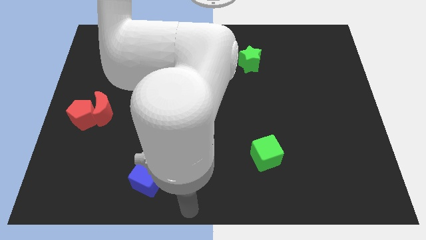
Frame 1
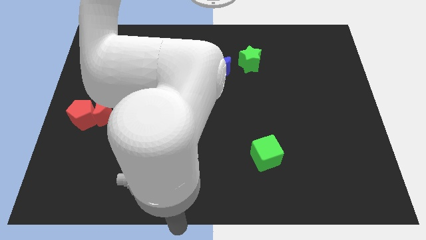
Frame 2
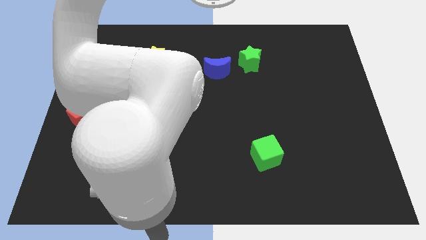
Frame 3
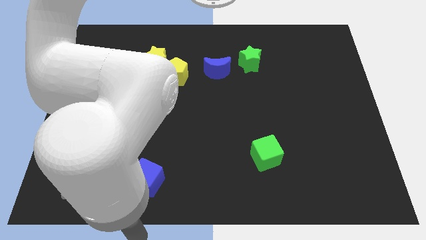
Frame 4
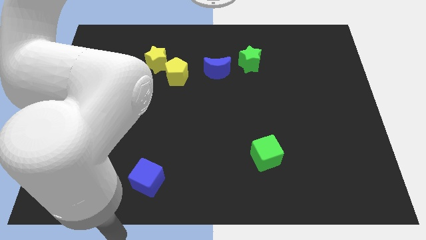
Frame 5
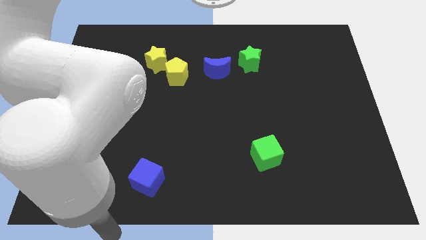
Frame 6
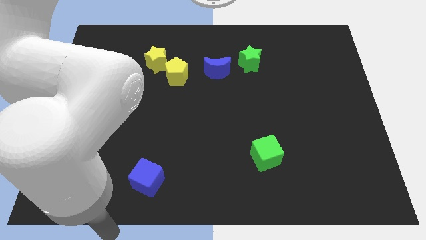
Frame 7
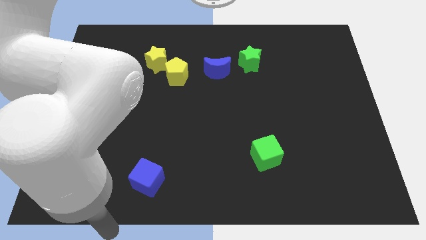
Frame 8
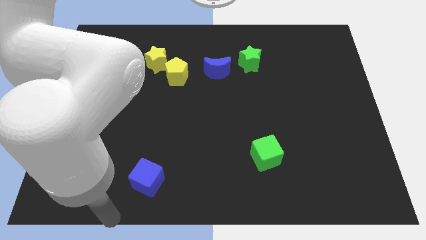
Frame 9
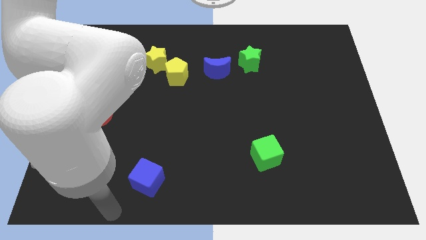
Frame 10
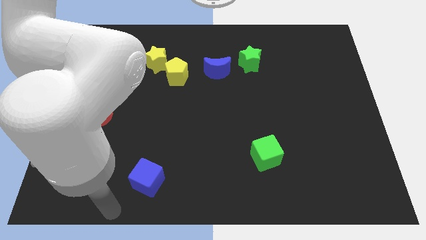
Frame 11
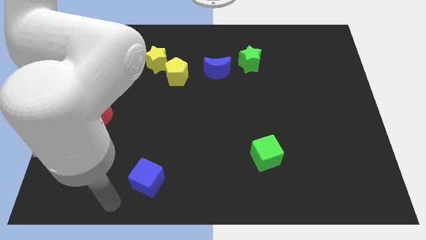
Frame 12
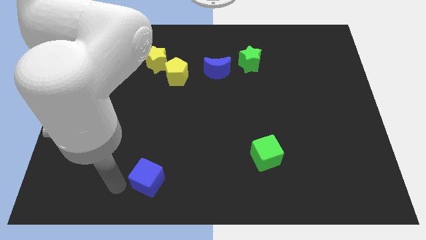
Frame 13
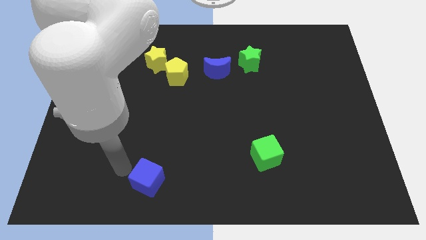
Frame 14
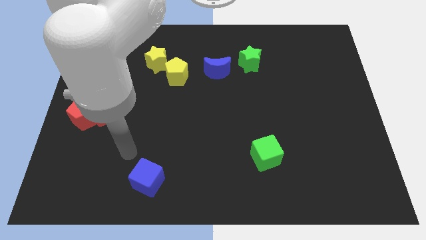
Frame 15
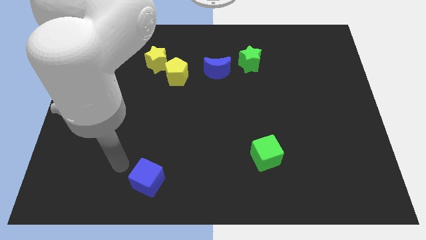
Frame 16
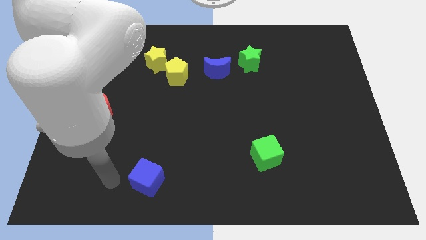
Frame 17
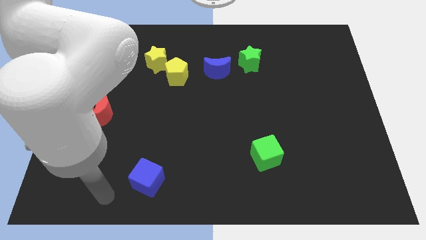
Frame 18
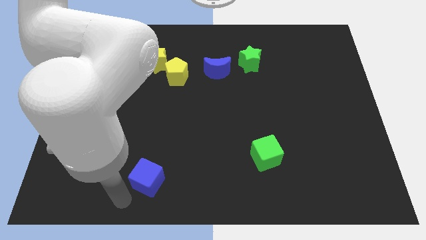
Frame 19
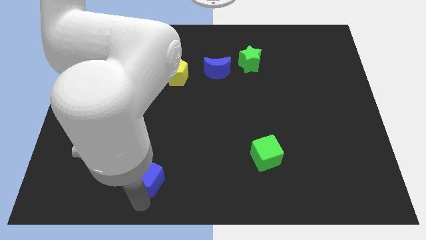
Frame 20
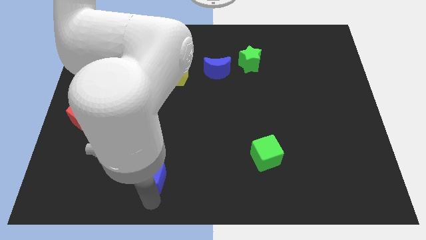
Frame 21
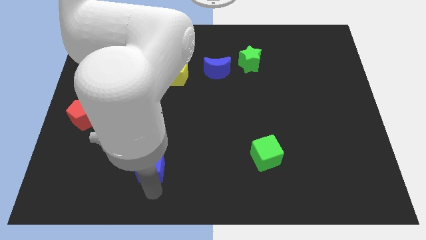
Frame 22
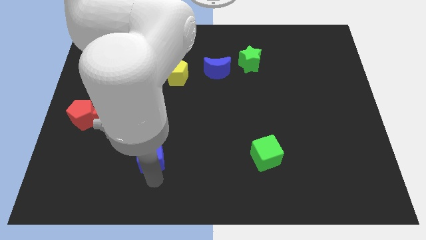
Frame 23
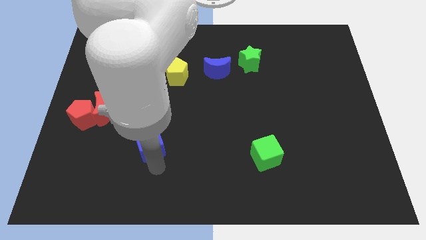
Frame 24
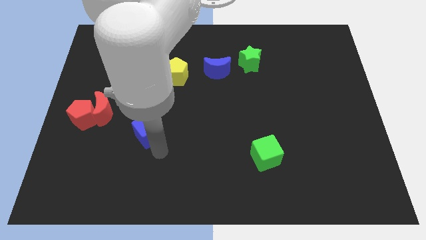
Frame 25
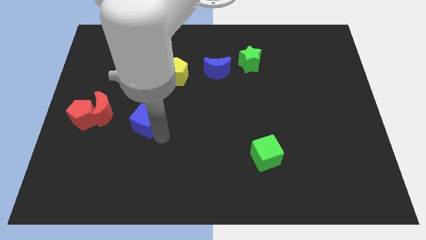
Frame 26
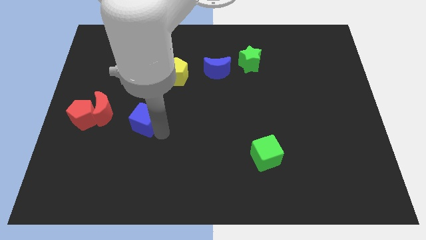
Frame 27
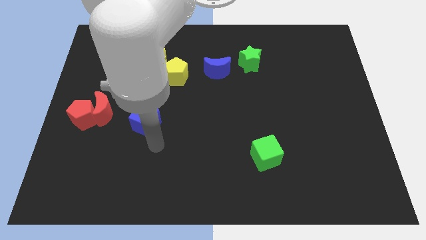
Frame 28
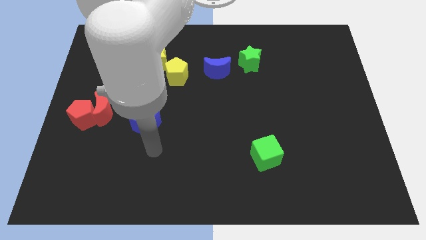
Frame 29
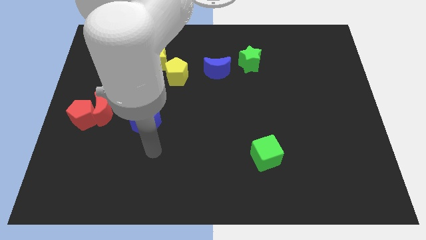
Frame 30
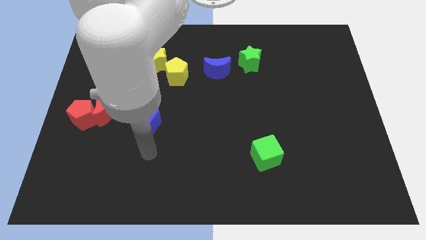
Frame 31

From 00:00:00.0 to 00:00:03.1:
push the blue cube right of the red crescent

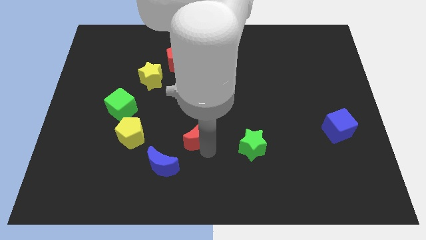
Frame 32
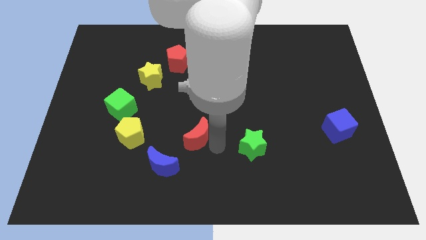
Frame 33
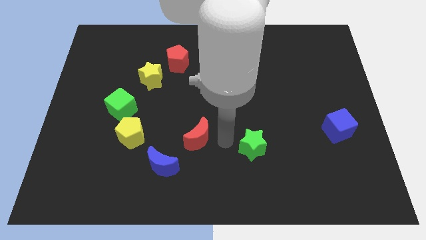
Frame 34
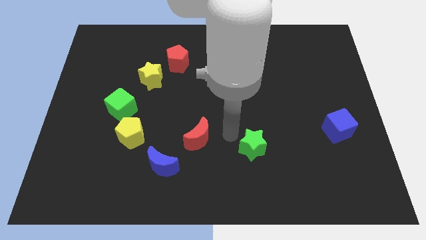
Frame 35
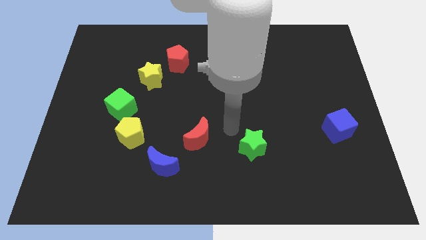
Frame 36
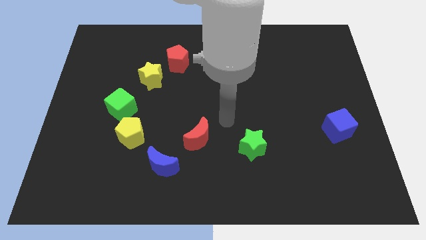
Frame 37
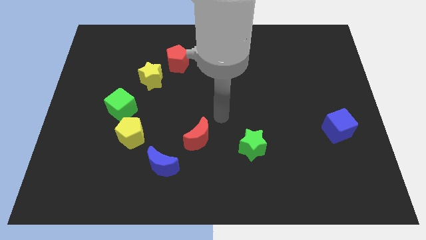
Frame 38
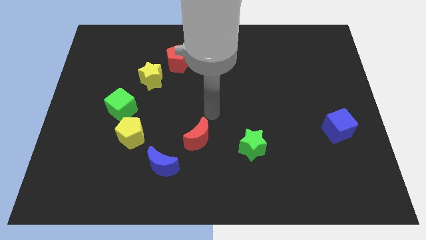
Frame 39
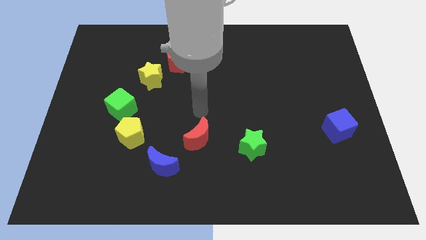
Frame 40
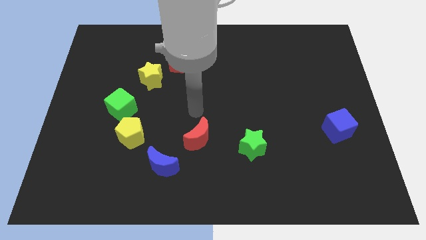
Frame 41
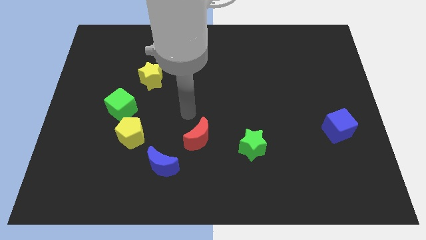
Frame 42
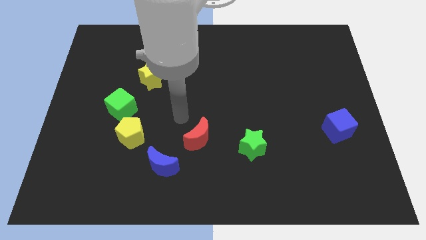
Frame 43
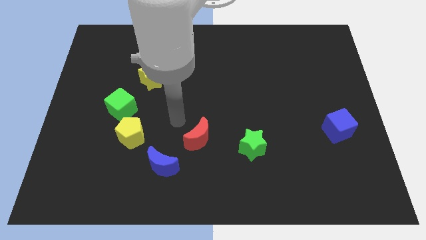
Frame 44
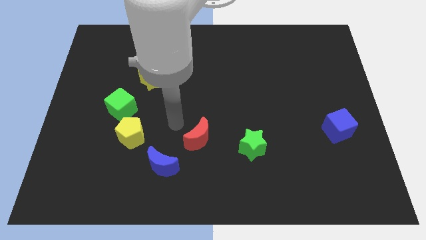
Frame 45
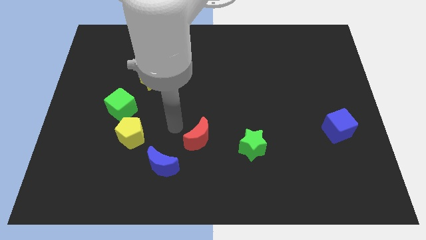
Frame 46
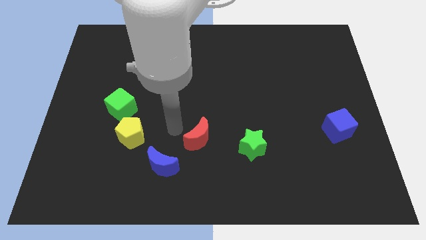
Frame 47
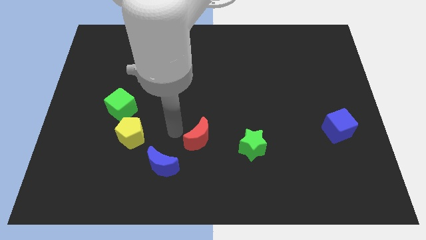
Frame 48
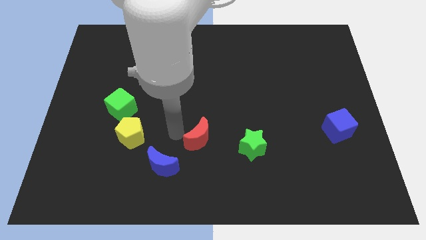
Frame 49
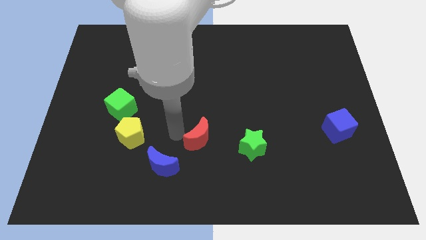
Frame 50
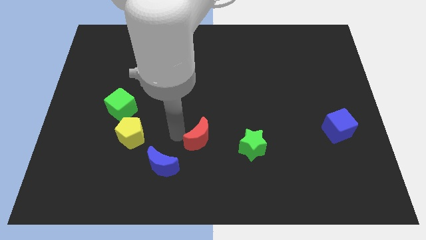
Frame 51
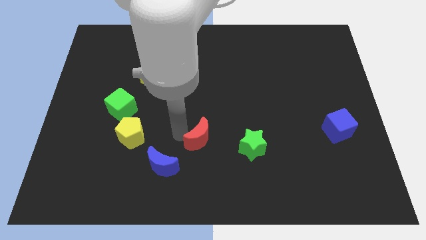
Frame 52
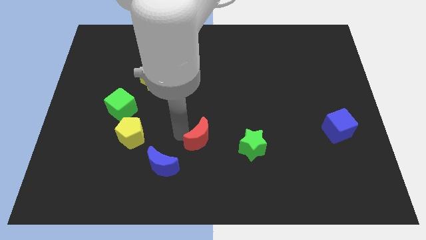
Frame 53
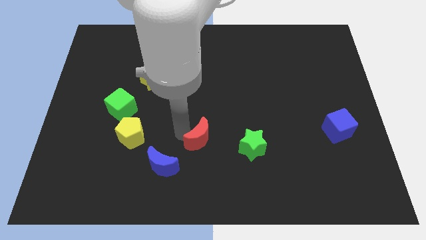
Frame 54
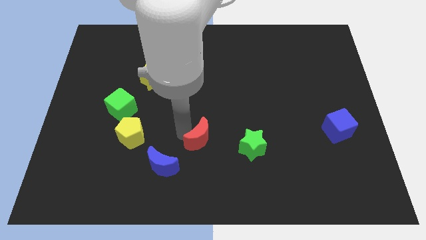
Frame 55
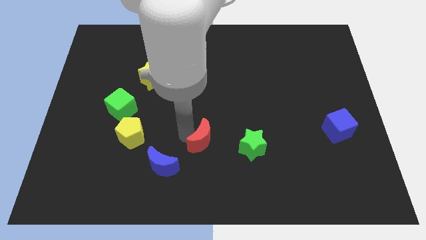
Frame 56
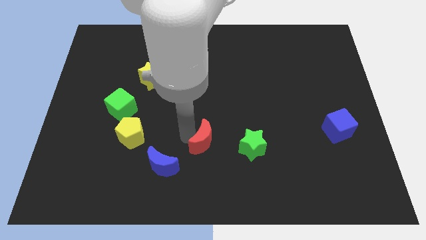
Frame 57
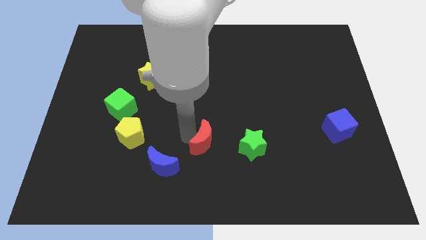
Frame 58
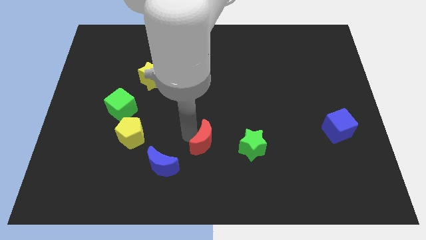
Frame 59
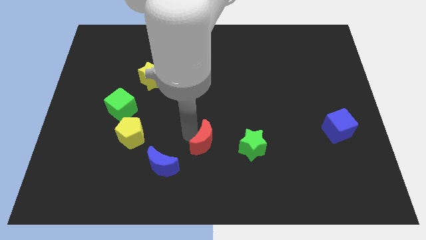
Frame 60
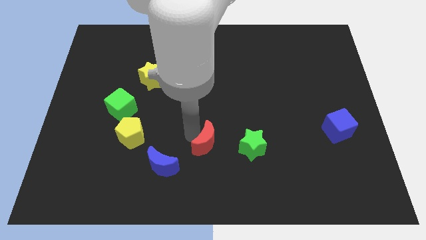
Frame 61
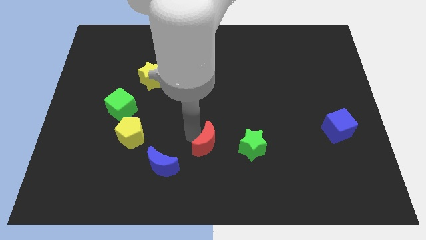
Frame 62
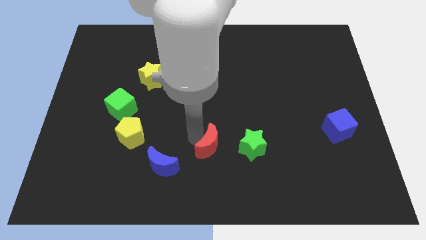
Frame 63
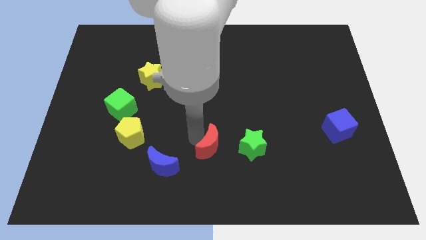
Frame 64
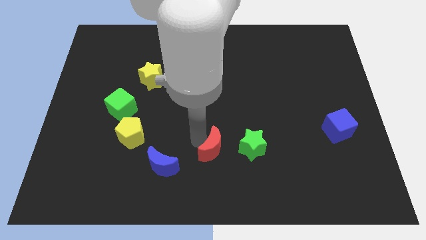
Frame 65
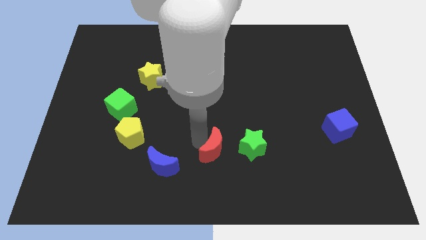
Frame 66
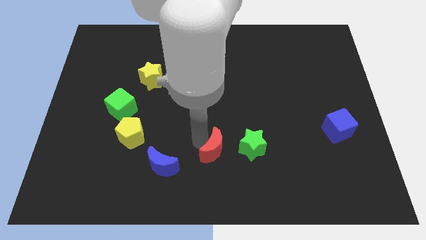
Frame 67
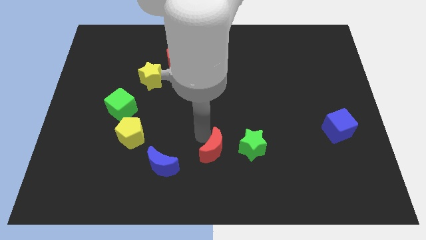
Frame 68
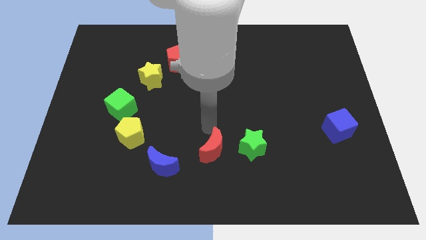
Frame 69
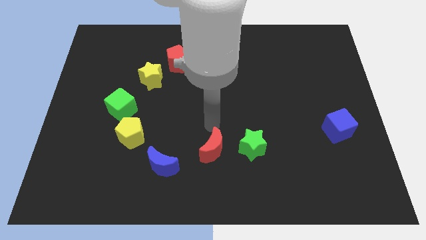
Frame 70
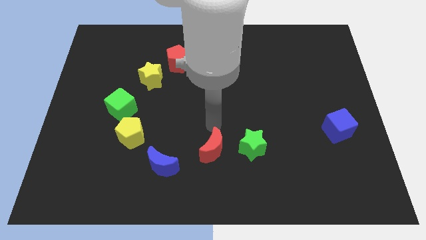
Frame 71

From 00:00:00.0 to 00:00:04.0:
push red crescent slightly towards down

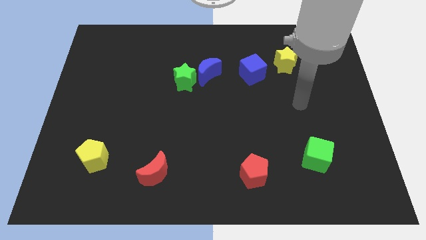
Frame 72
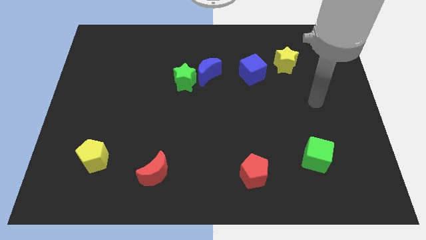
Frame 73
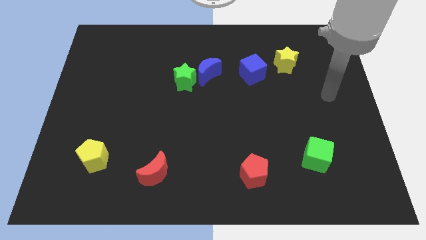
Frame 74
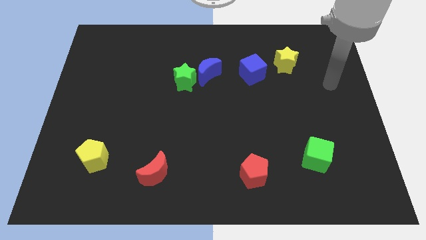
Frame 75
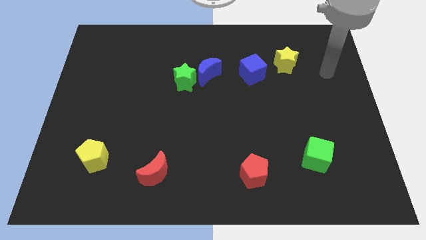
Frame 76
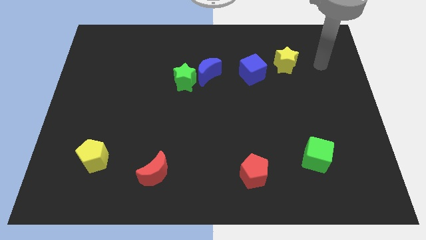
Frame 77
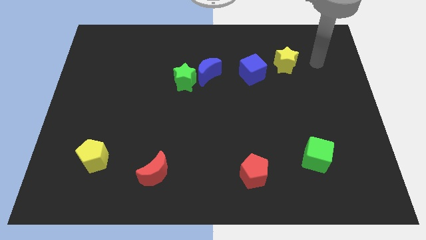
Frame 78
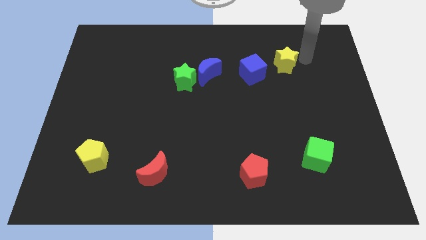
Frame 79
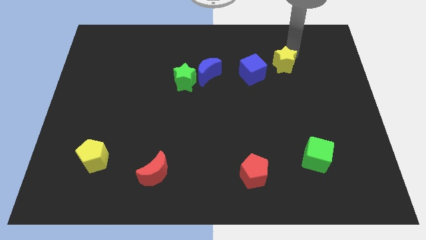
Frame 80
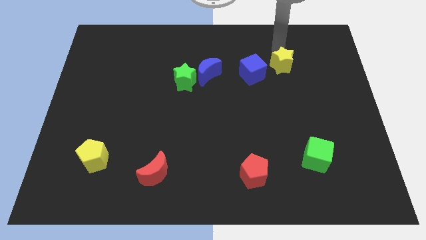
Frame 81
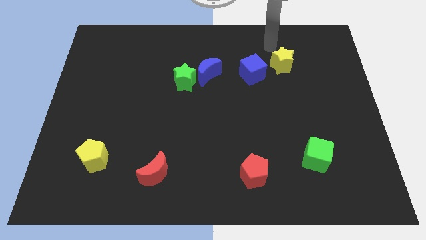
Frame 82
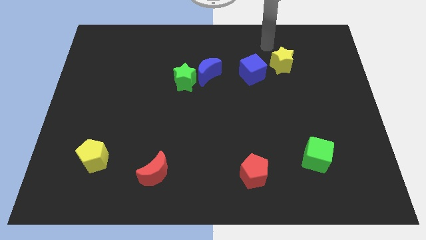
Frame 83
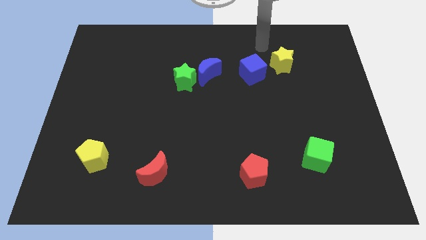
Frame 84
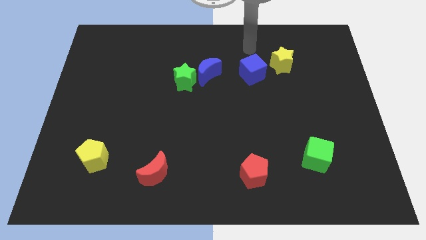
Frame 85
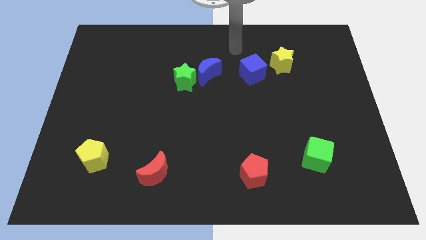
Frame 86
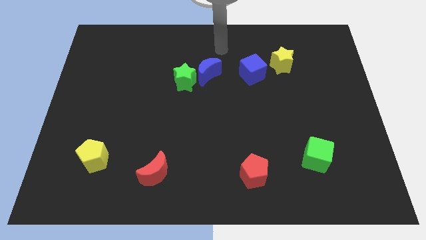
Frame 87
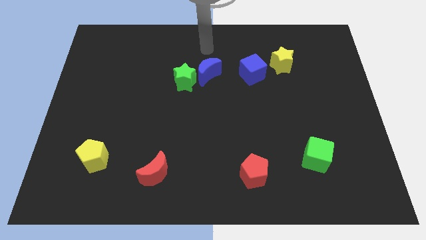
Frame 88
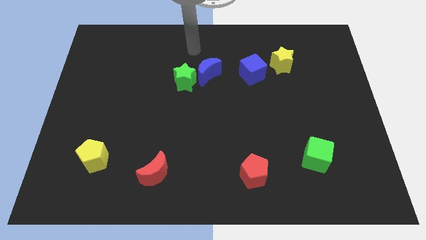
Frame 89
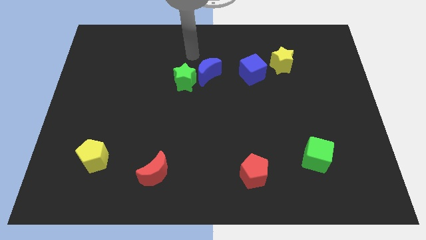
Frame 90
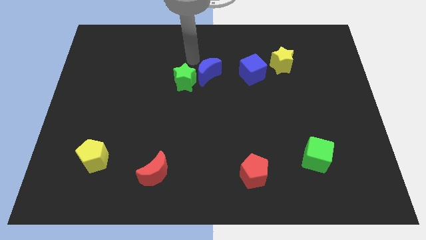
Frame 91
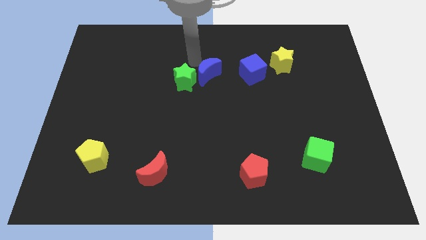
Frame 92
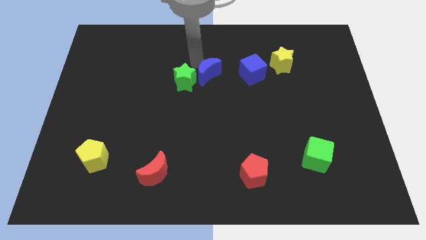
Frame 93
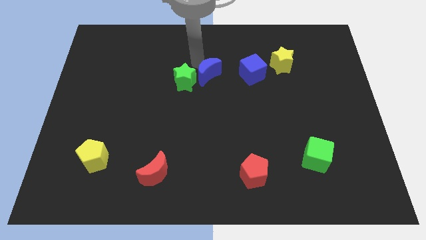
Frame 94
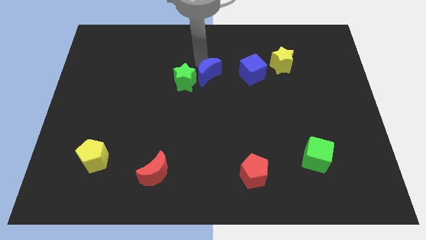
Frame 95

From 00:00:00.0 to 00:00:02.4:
place the arm at the top of blue crescent
